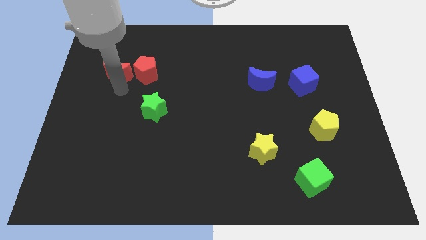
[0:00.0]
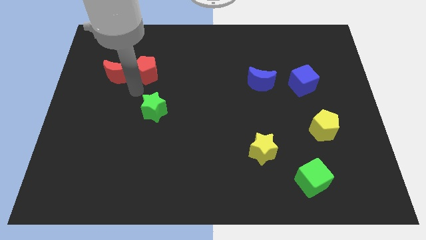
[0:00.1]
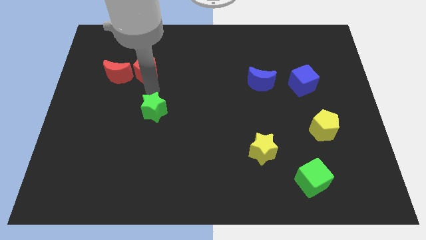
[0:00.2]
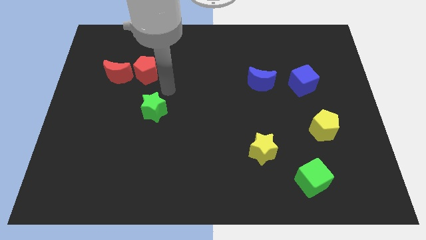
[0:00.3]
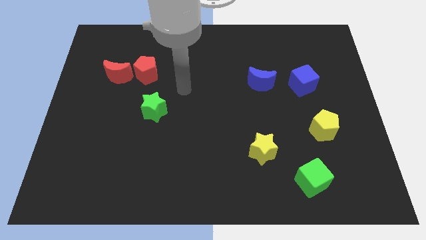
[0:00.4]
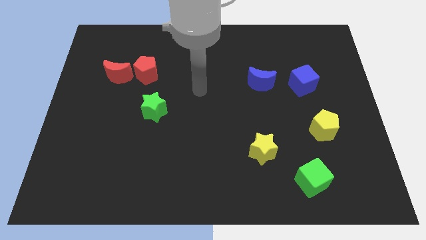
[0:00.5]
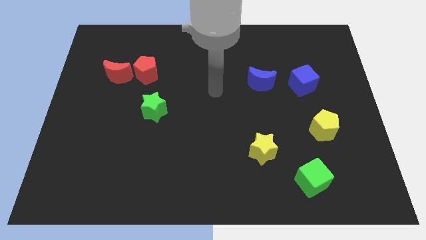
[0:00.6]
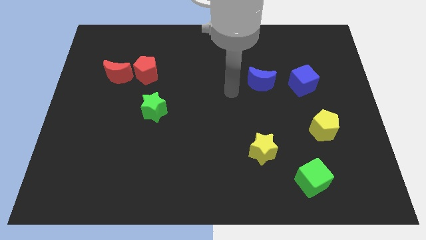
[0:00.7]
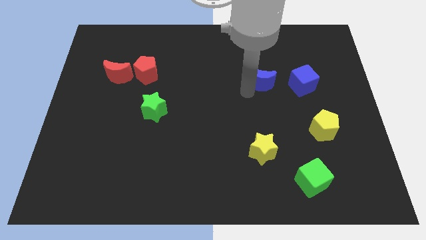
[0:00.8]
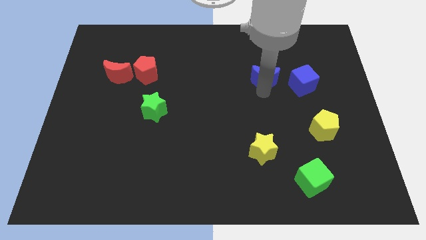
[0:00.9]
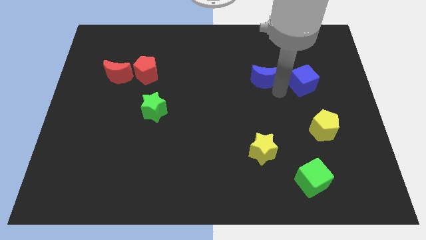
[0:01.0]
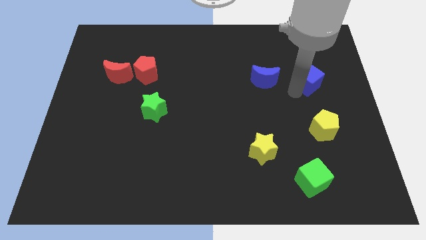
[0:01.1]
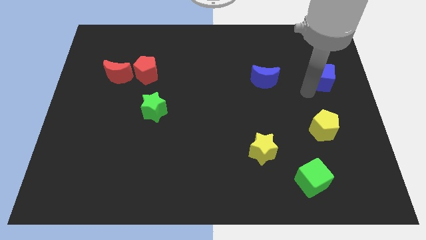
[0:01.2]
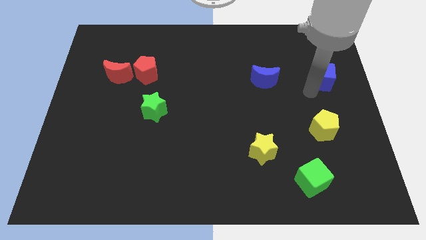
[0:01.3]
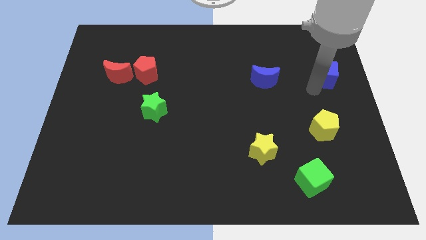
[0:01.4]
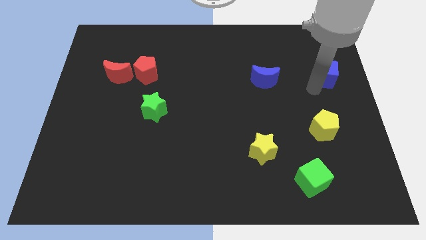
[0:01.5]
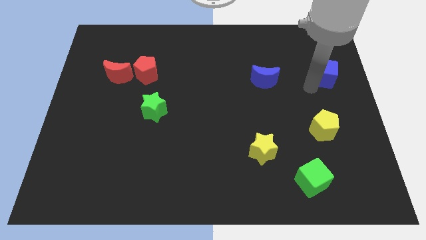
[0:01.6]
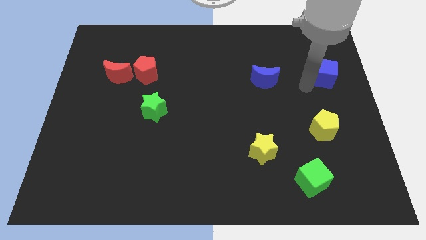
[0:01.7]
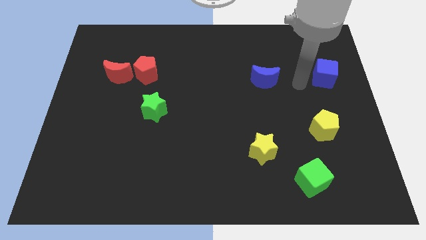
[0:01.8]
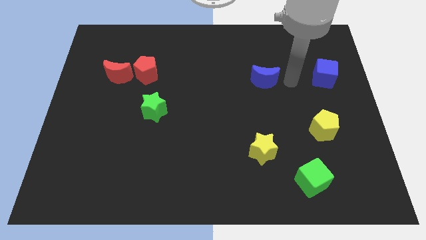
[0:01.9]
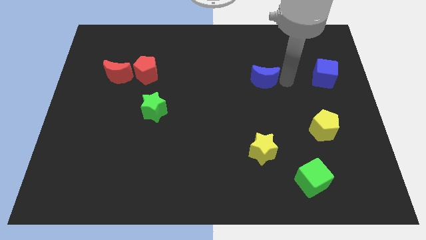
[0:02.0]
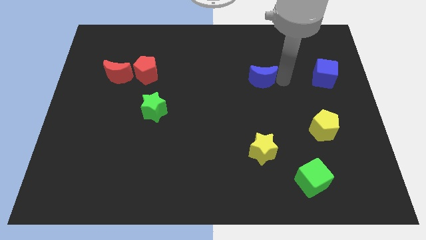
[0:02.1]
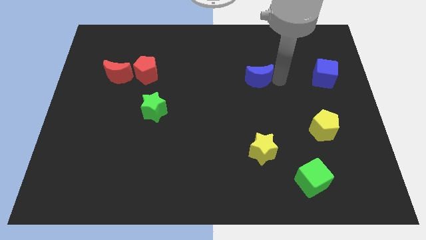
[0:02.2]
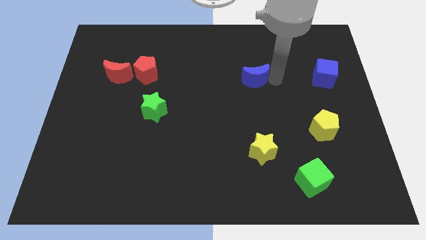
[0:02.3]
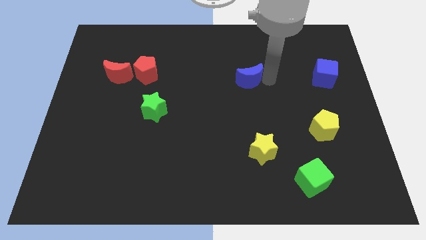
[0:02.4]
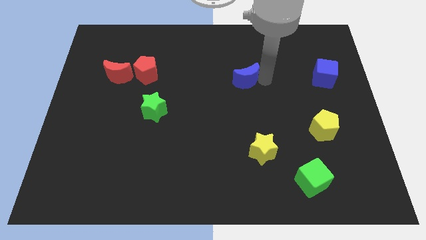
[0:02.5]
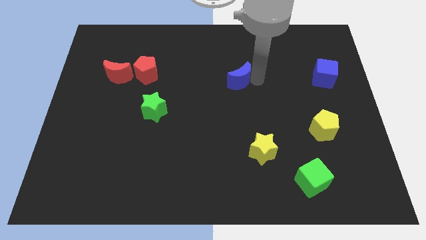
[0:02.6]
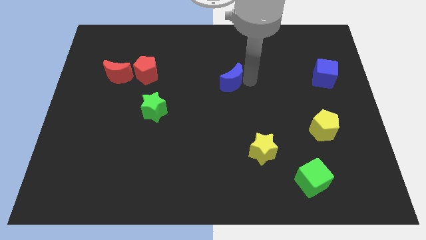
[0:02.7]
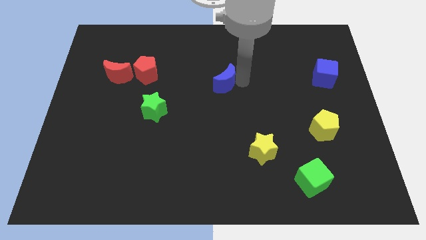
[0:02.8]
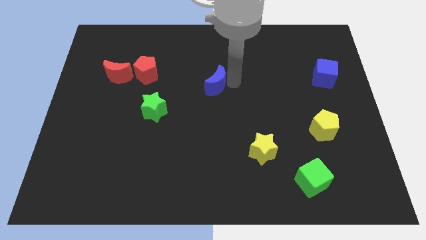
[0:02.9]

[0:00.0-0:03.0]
separate the blue moon and blue cube from each others

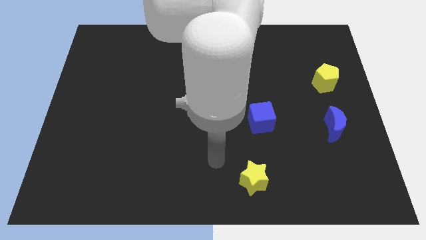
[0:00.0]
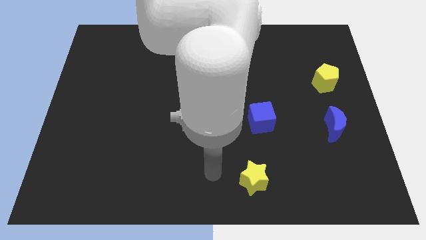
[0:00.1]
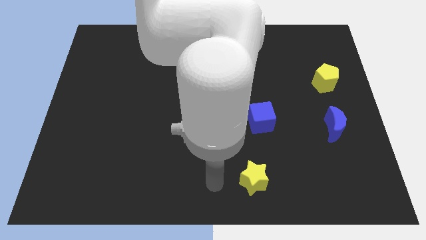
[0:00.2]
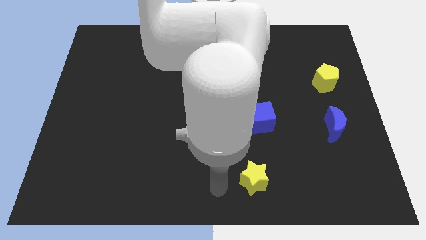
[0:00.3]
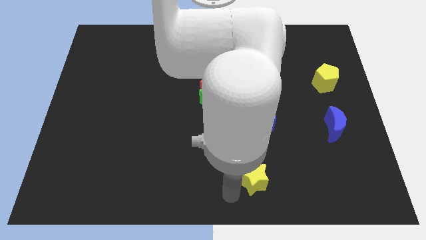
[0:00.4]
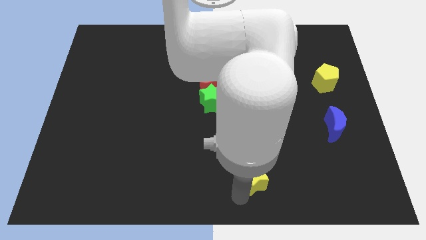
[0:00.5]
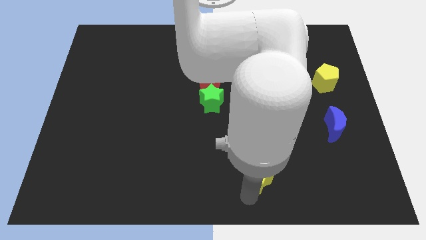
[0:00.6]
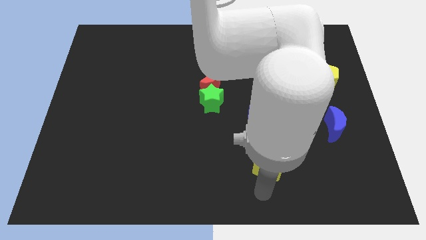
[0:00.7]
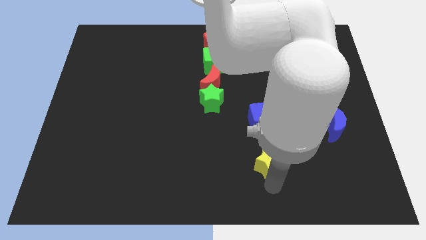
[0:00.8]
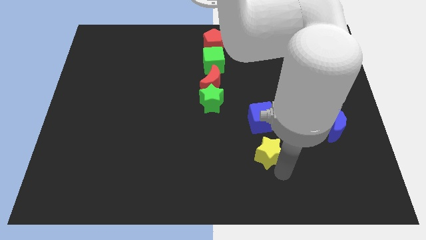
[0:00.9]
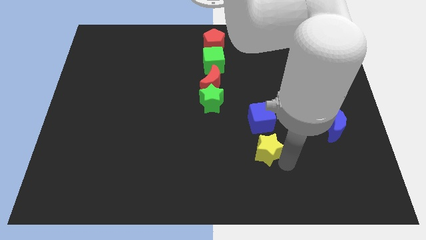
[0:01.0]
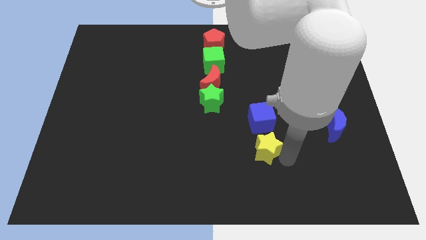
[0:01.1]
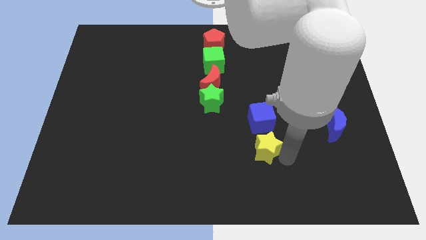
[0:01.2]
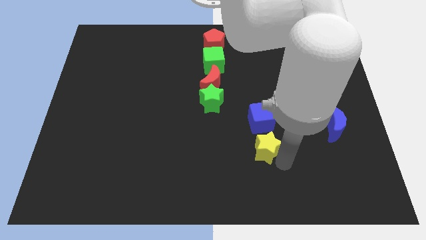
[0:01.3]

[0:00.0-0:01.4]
place yellow star below blue cube

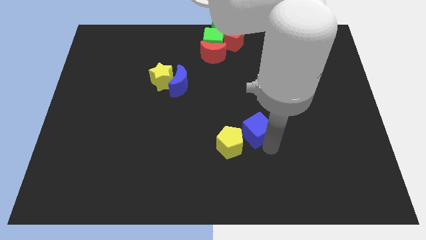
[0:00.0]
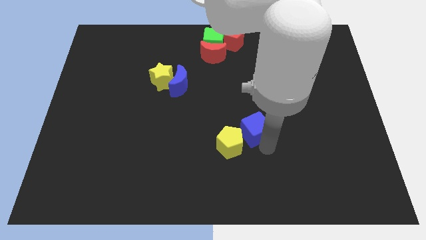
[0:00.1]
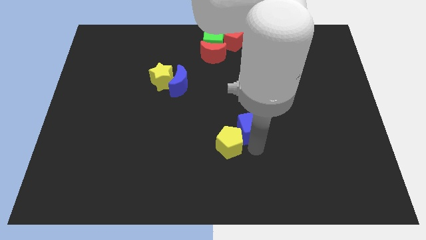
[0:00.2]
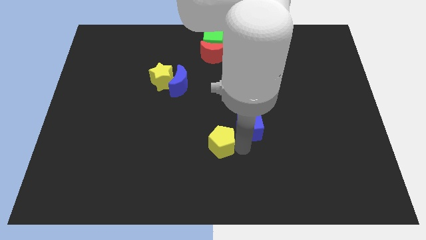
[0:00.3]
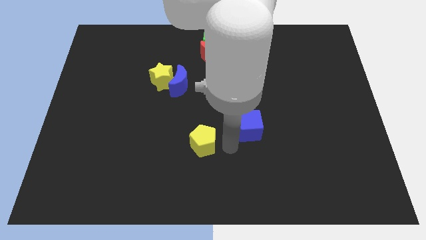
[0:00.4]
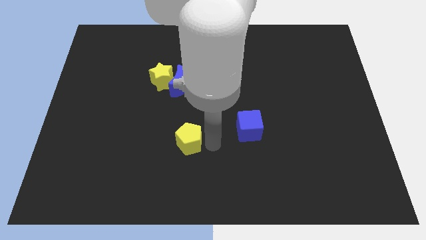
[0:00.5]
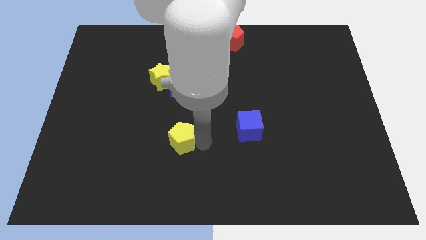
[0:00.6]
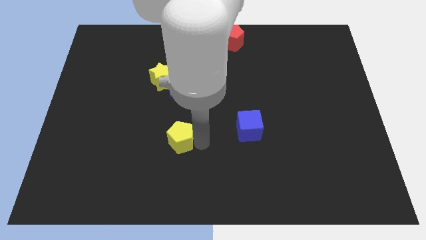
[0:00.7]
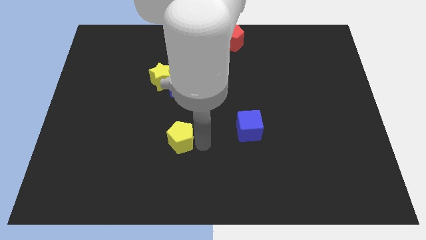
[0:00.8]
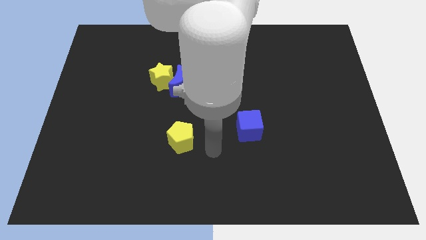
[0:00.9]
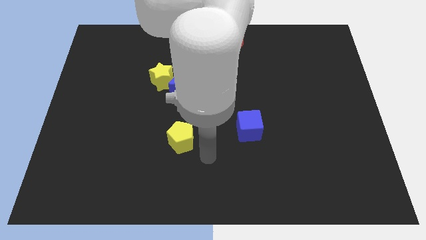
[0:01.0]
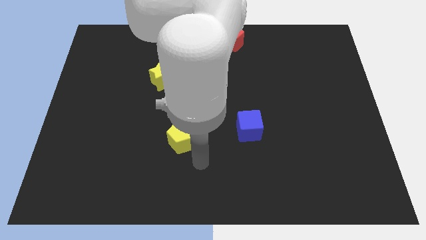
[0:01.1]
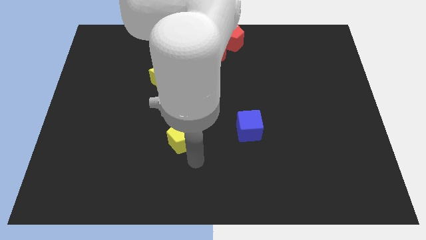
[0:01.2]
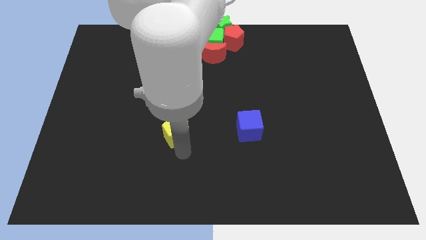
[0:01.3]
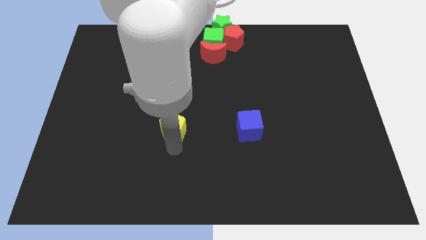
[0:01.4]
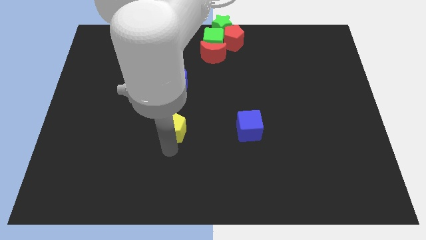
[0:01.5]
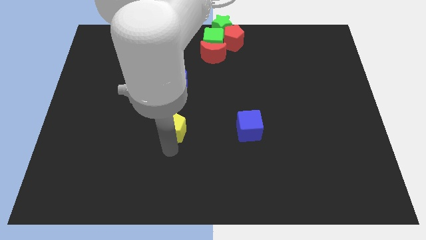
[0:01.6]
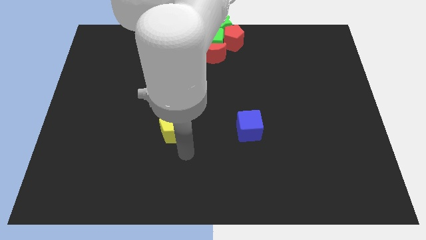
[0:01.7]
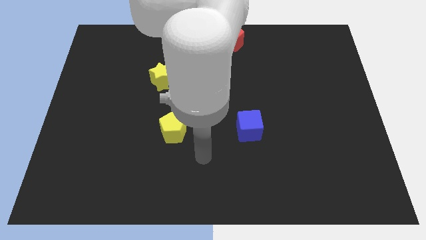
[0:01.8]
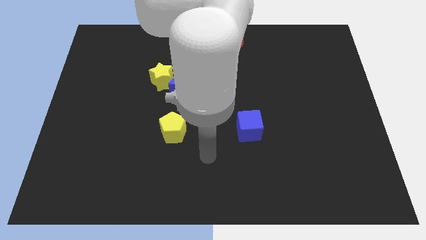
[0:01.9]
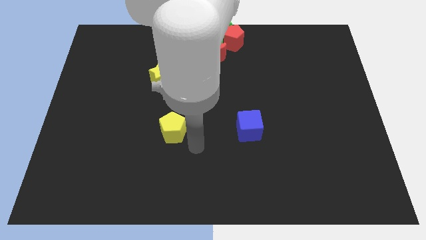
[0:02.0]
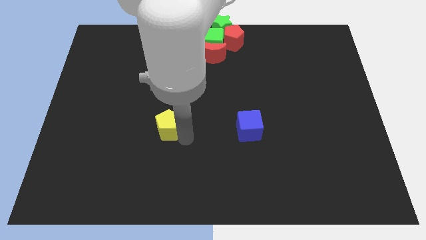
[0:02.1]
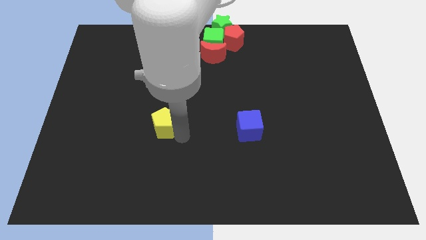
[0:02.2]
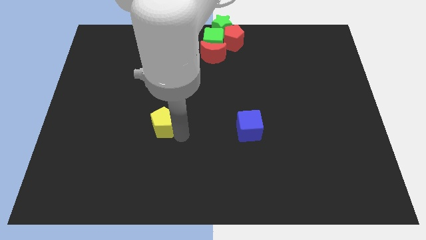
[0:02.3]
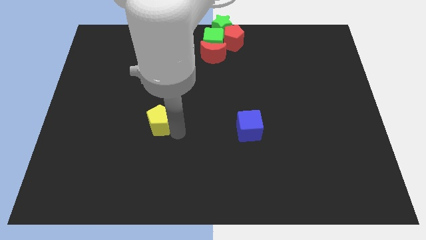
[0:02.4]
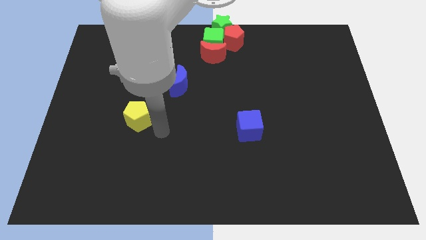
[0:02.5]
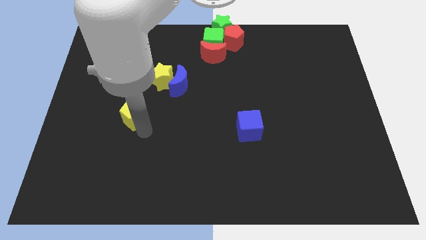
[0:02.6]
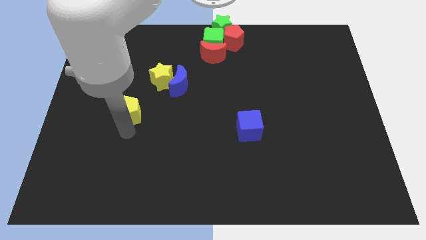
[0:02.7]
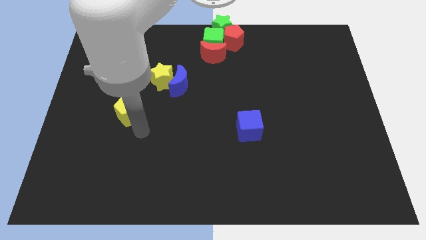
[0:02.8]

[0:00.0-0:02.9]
move yellow pentagon towards center left

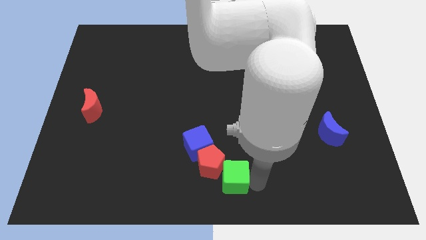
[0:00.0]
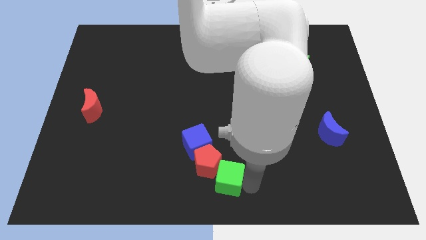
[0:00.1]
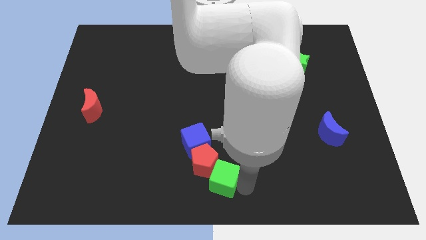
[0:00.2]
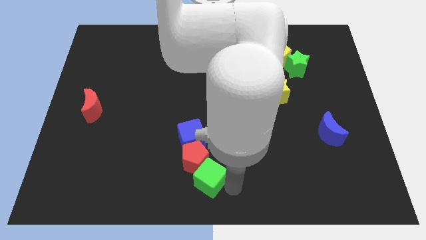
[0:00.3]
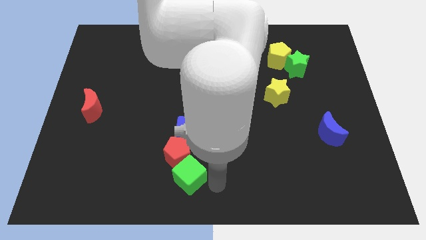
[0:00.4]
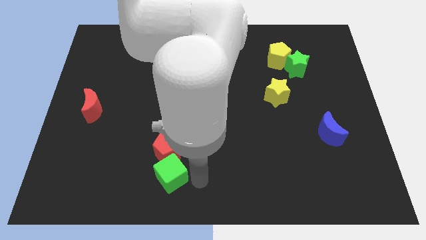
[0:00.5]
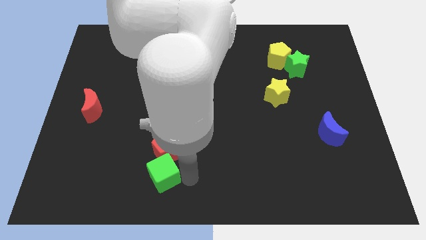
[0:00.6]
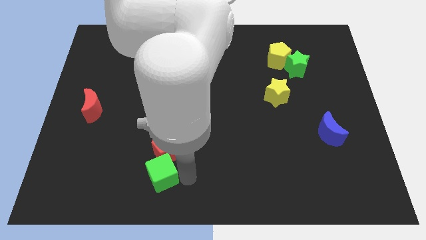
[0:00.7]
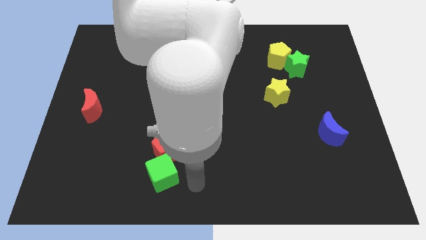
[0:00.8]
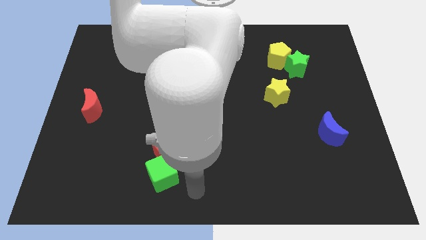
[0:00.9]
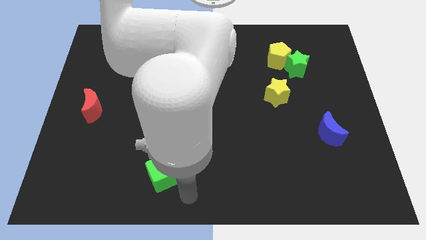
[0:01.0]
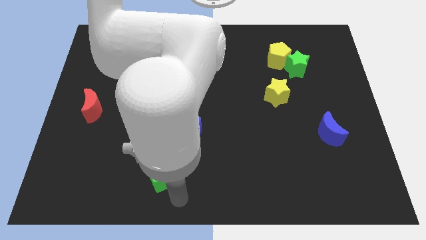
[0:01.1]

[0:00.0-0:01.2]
push the green cube to the left

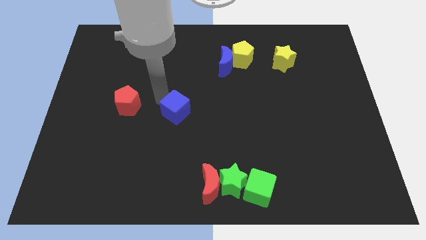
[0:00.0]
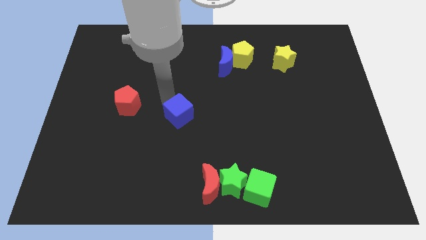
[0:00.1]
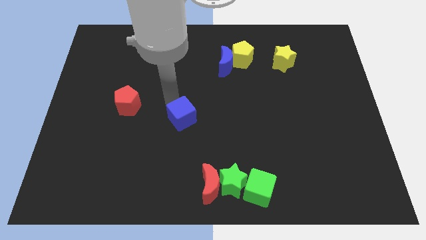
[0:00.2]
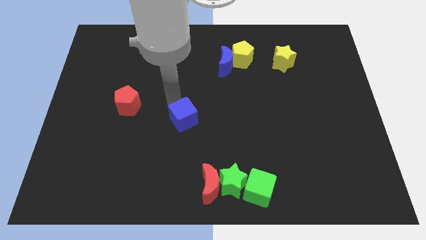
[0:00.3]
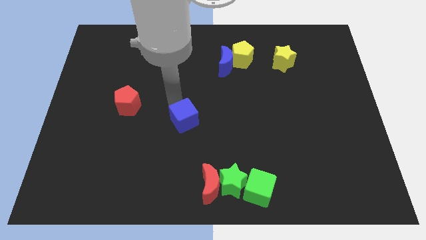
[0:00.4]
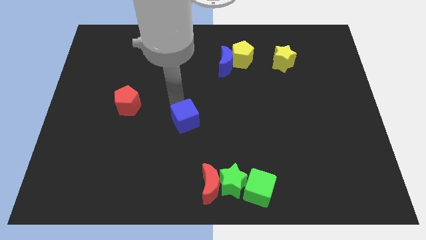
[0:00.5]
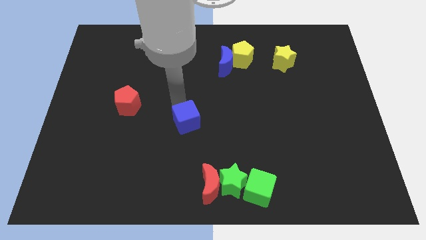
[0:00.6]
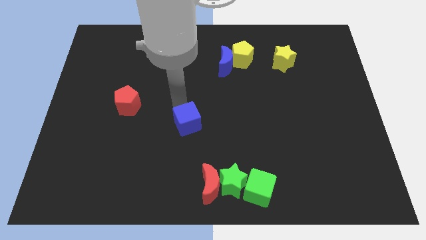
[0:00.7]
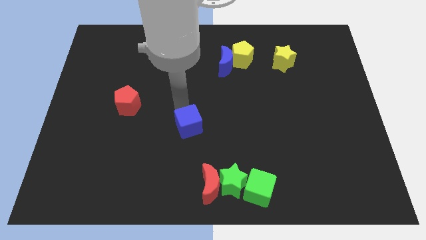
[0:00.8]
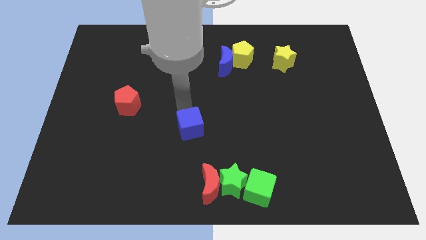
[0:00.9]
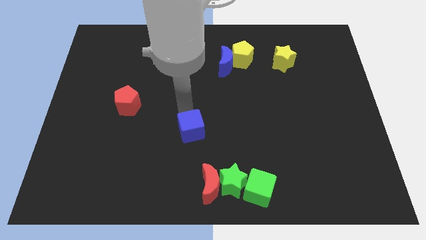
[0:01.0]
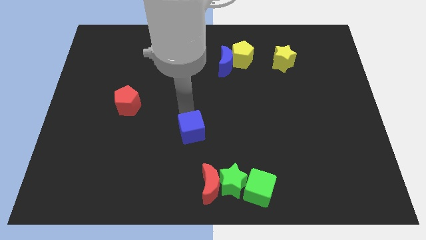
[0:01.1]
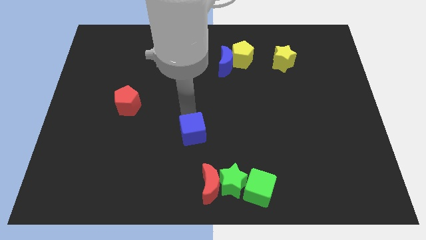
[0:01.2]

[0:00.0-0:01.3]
push the blue cube slightly to the bottom
